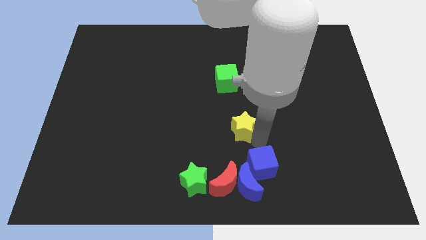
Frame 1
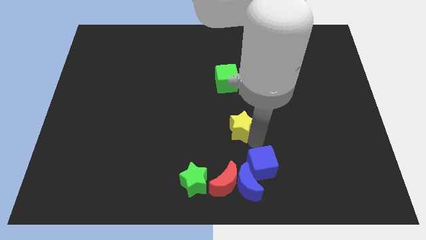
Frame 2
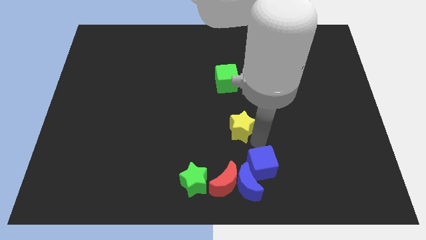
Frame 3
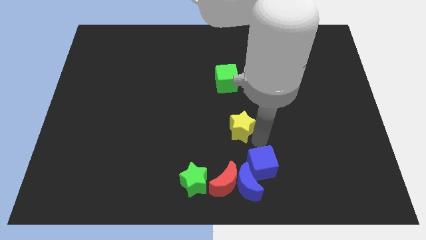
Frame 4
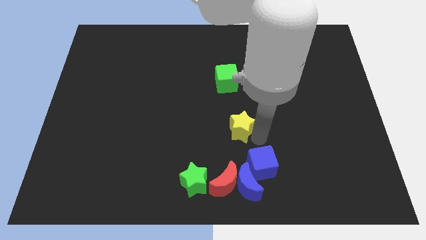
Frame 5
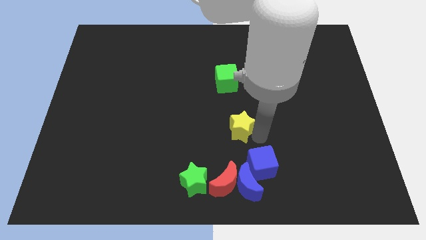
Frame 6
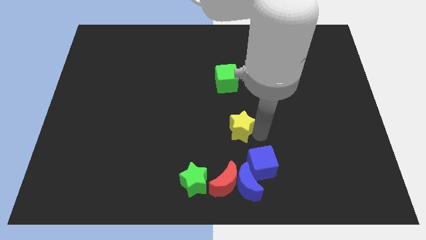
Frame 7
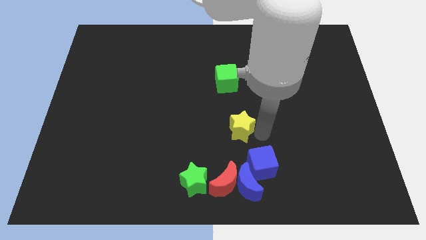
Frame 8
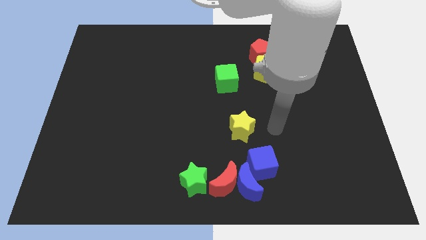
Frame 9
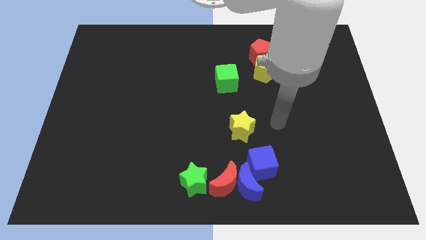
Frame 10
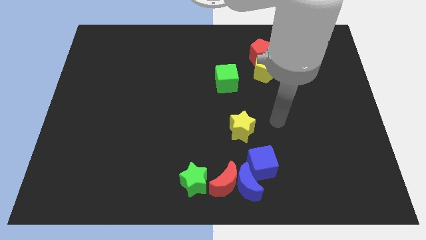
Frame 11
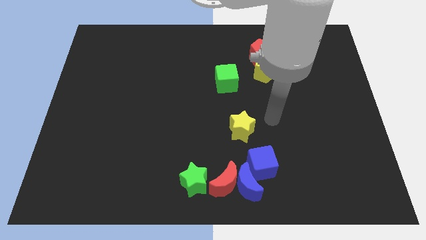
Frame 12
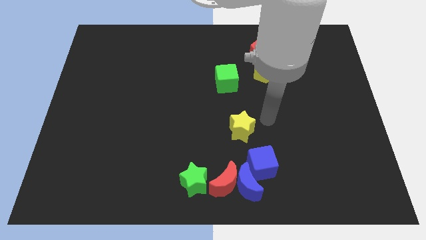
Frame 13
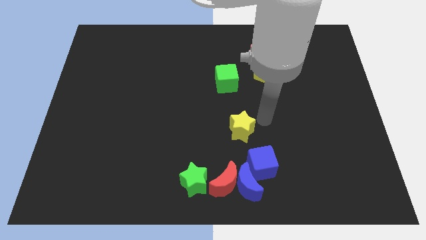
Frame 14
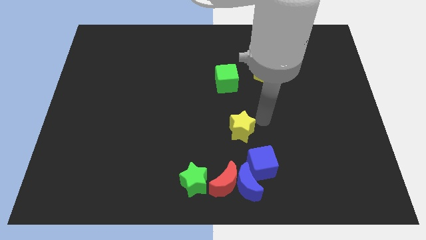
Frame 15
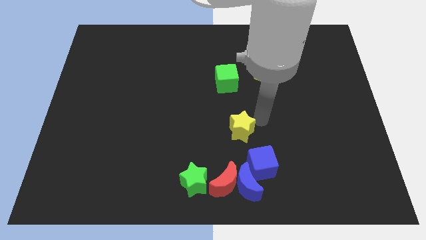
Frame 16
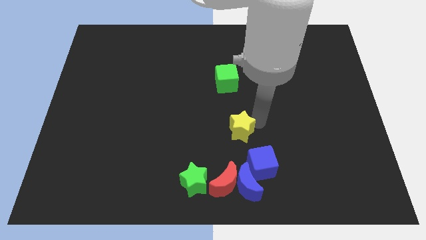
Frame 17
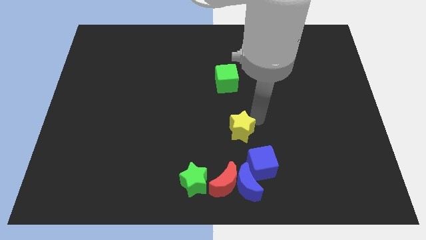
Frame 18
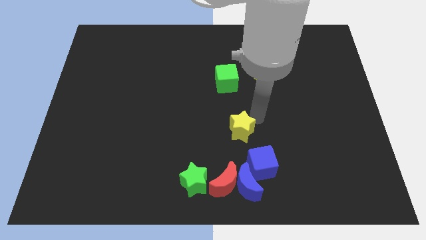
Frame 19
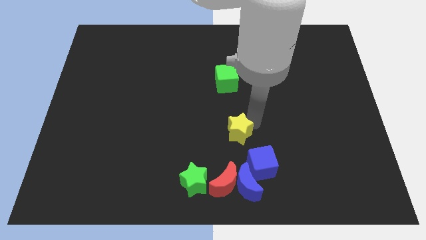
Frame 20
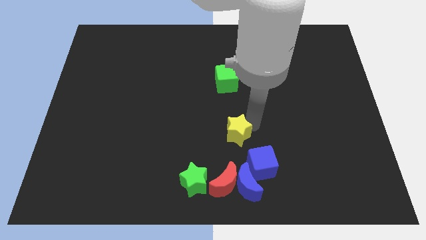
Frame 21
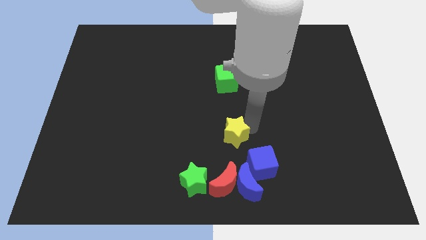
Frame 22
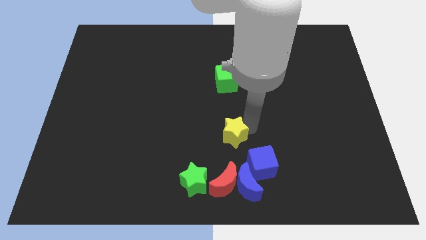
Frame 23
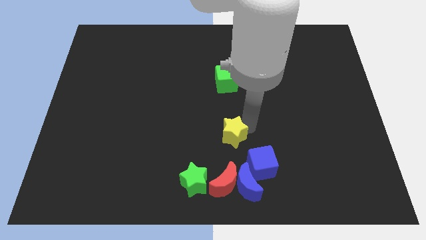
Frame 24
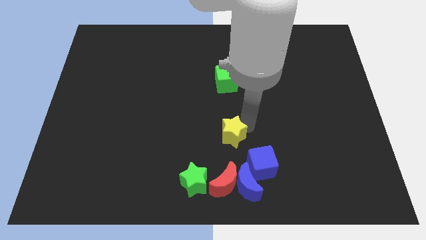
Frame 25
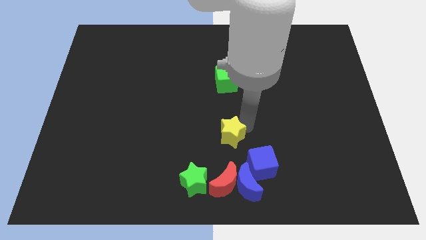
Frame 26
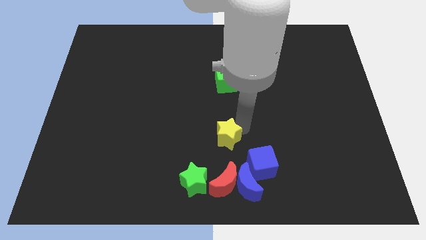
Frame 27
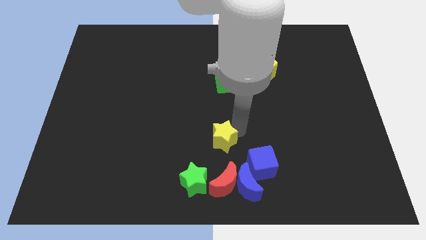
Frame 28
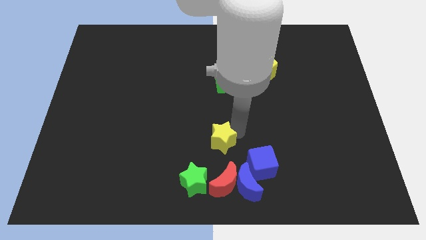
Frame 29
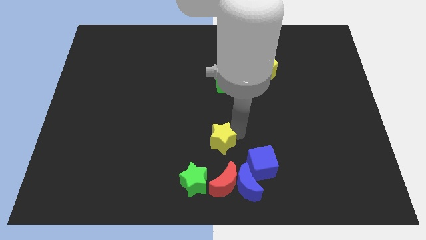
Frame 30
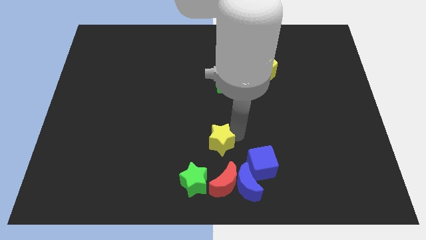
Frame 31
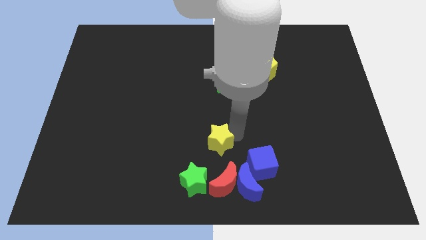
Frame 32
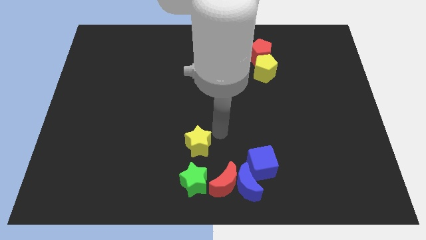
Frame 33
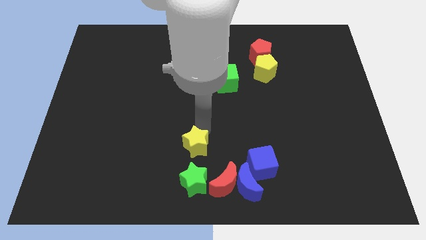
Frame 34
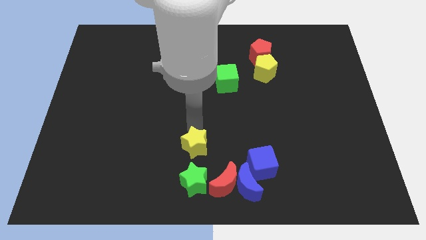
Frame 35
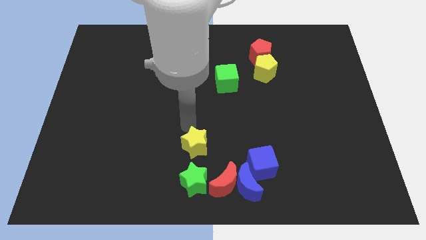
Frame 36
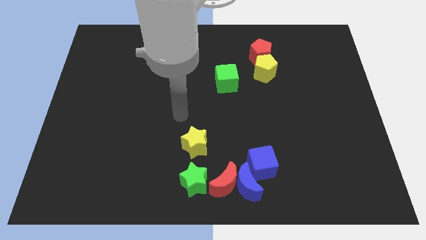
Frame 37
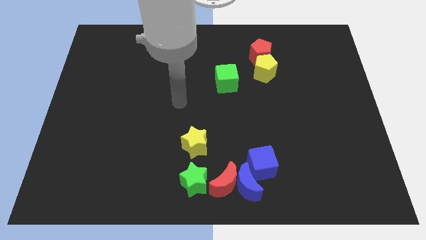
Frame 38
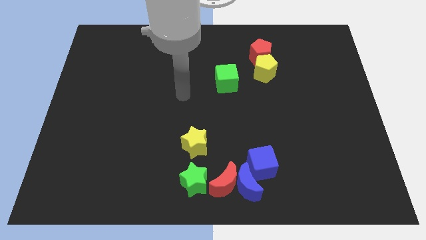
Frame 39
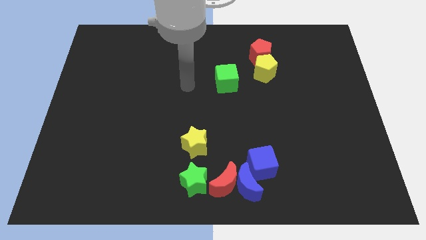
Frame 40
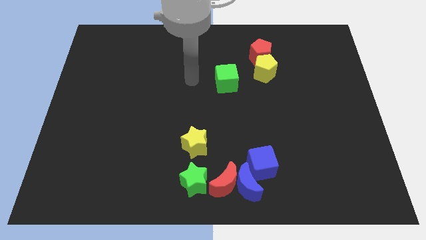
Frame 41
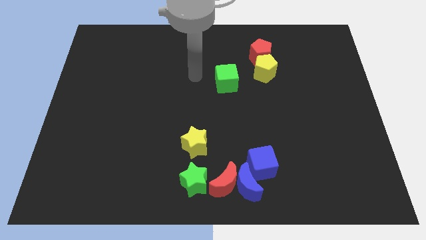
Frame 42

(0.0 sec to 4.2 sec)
move yellow star above the green star

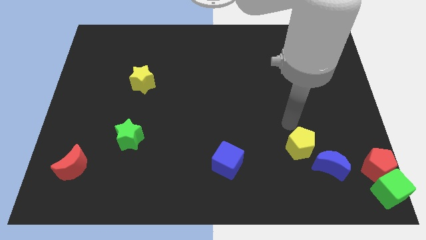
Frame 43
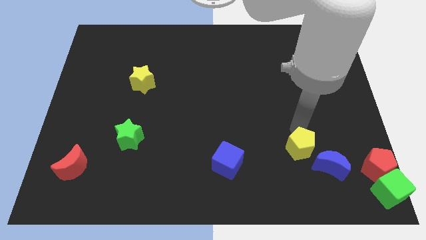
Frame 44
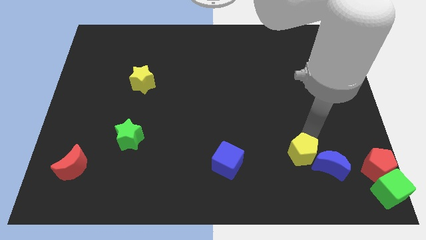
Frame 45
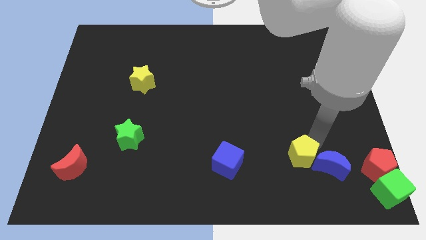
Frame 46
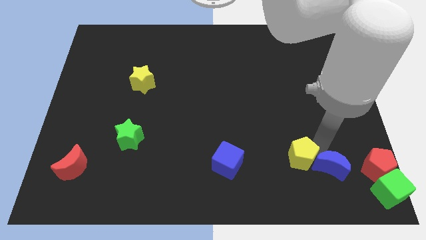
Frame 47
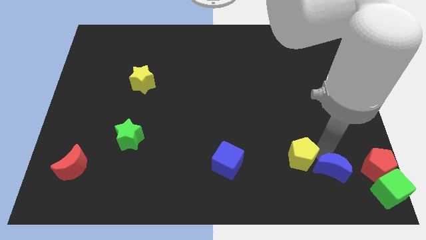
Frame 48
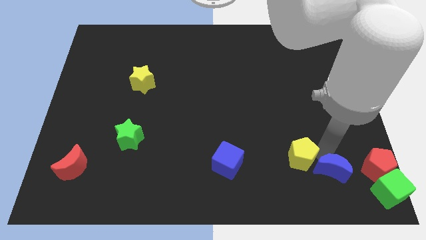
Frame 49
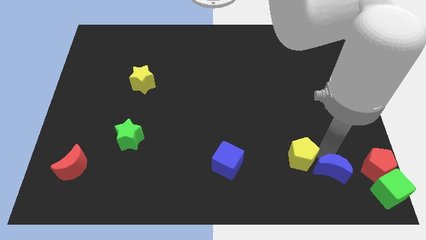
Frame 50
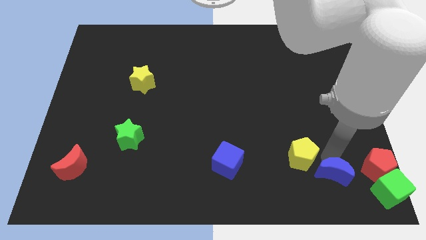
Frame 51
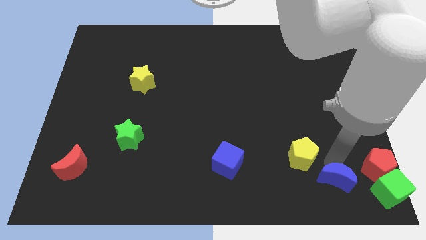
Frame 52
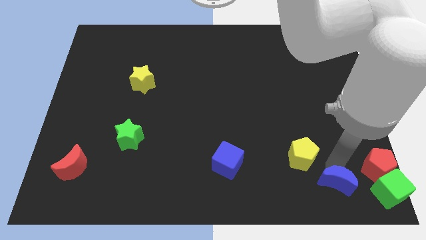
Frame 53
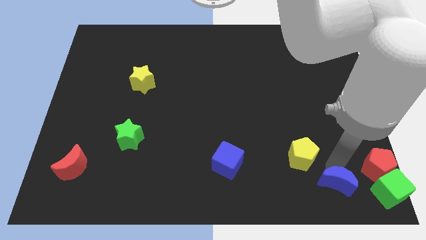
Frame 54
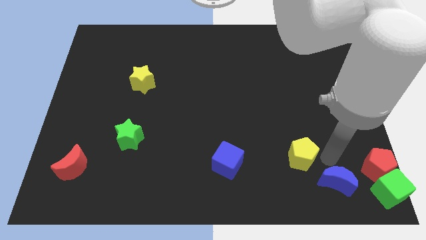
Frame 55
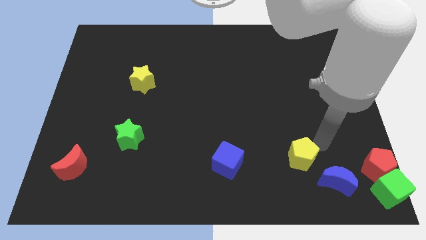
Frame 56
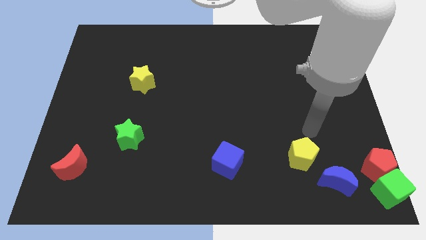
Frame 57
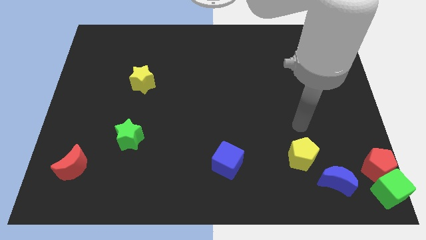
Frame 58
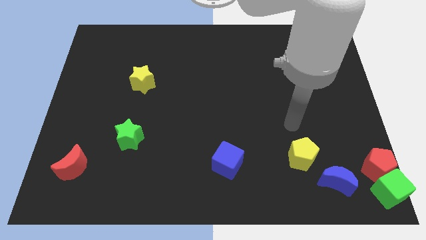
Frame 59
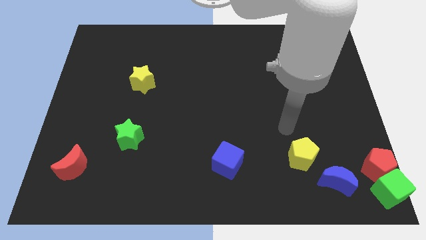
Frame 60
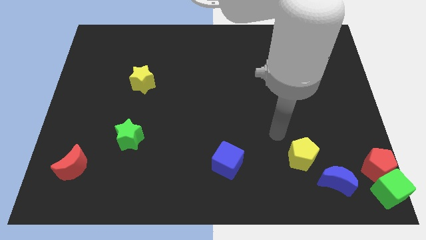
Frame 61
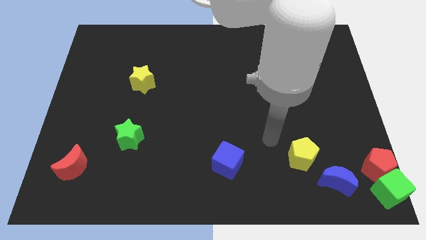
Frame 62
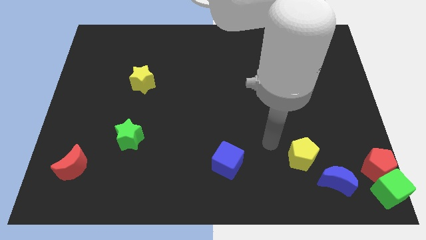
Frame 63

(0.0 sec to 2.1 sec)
push blue moon downwards

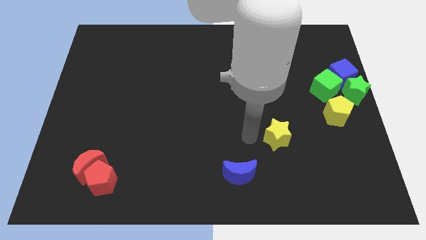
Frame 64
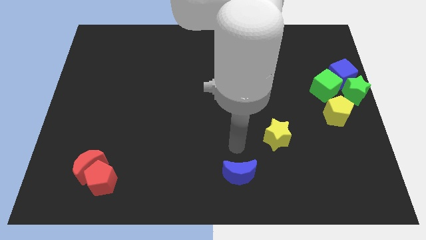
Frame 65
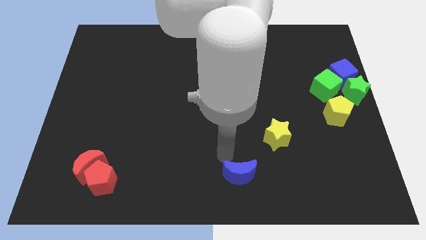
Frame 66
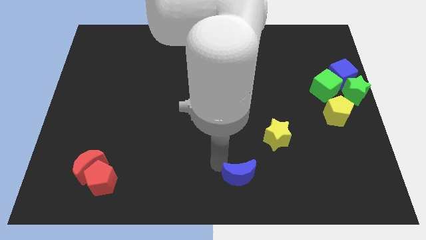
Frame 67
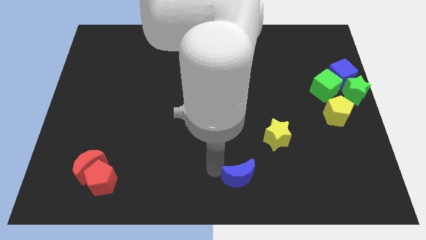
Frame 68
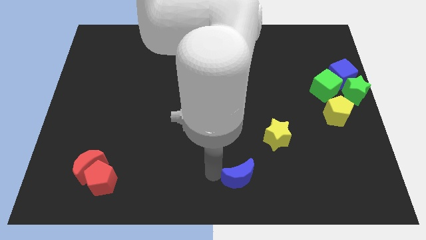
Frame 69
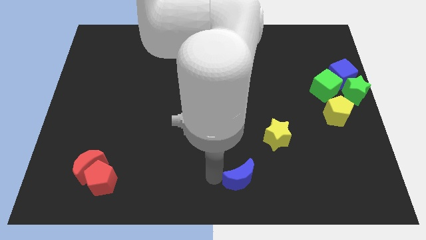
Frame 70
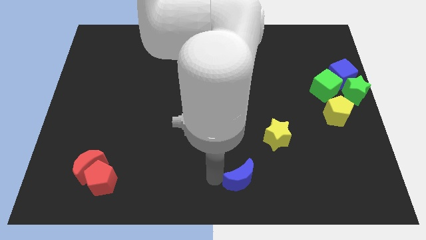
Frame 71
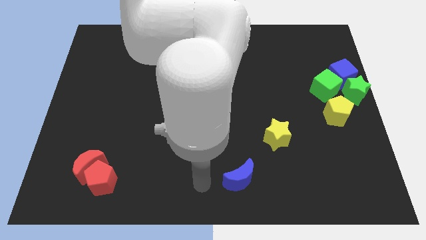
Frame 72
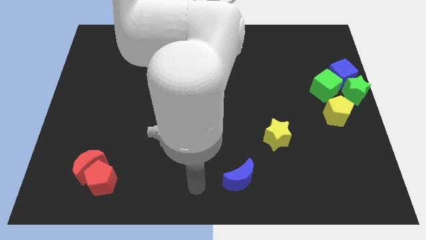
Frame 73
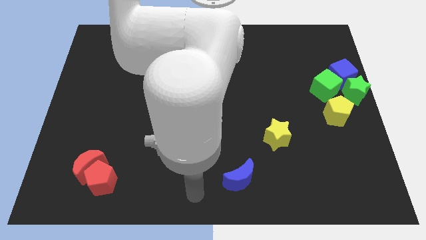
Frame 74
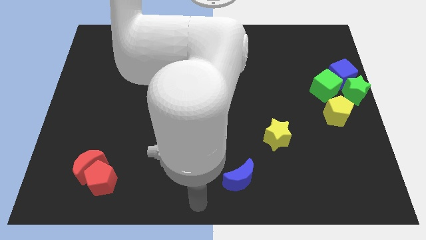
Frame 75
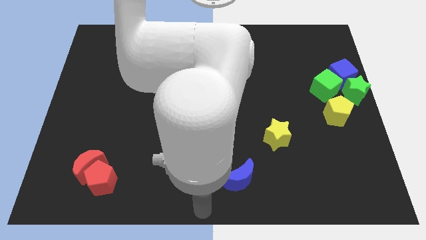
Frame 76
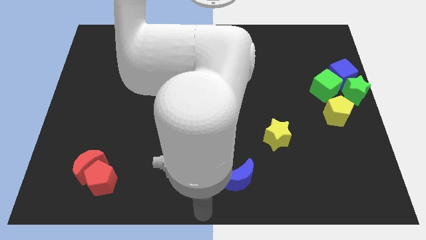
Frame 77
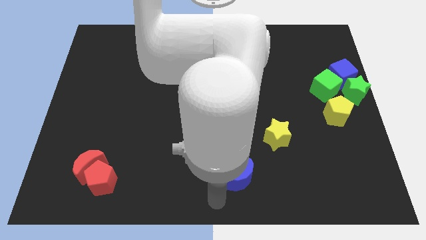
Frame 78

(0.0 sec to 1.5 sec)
slightly push the blue moon towards the bottom side

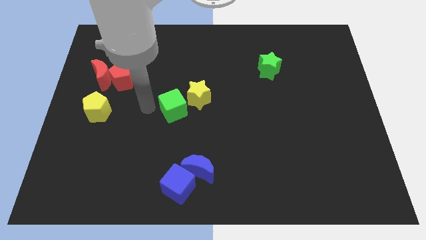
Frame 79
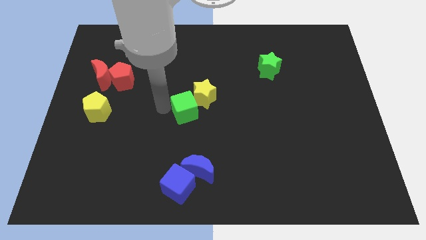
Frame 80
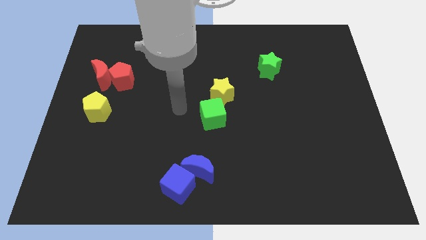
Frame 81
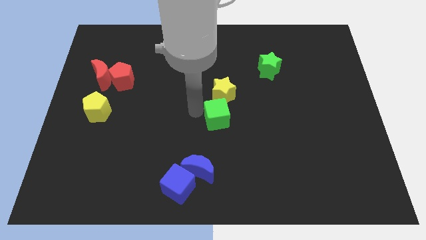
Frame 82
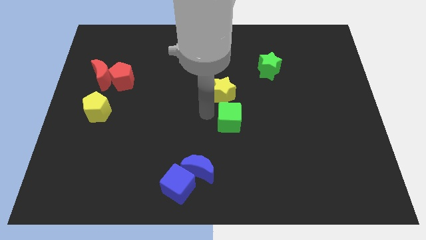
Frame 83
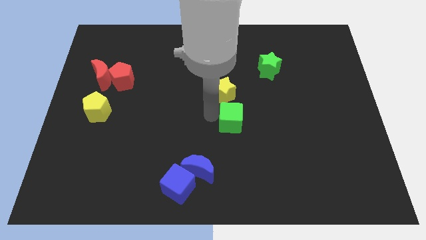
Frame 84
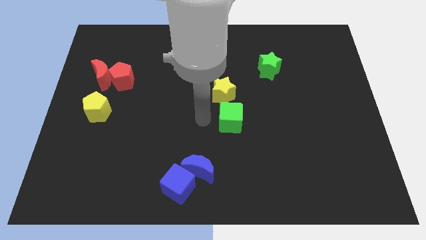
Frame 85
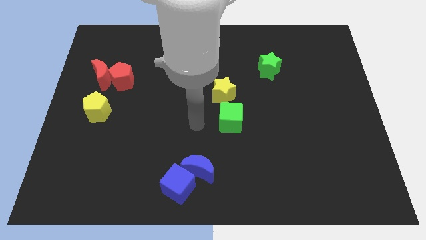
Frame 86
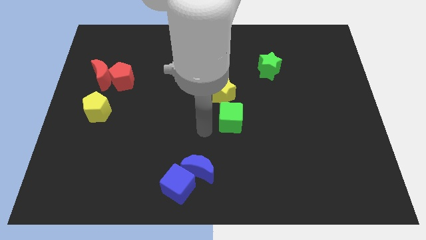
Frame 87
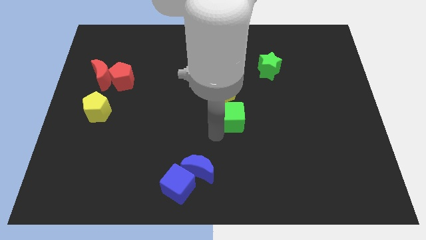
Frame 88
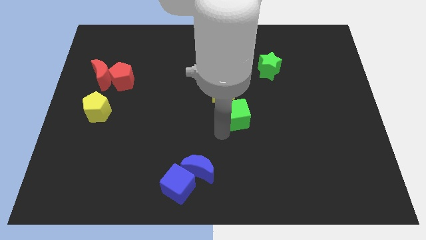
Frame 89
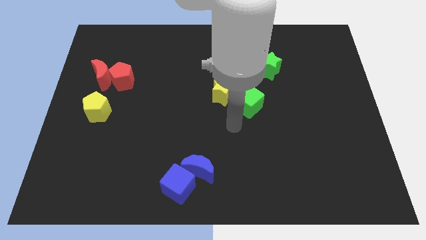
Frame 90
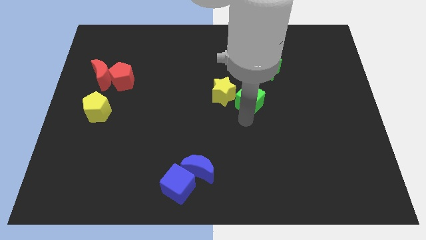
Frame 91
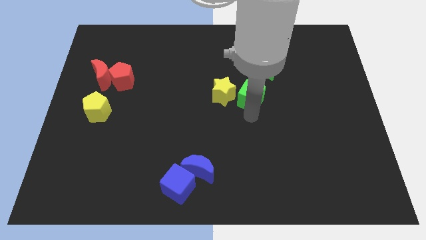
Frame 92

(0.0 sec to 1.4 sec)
drag the green cube to the right
